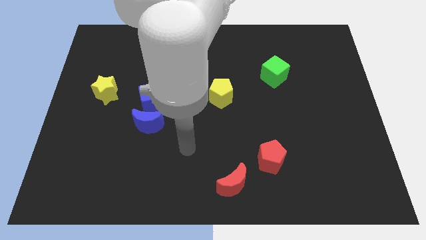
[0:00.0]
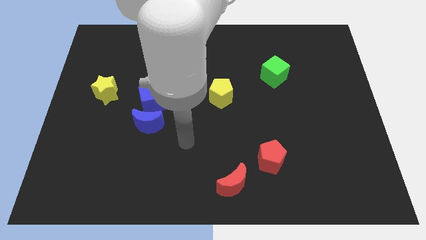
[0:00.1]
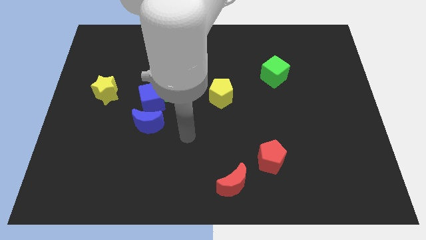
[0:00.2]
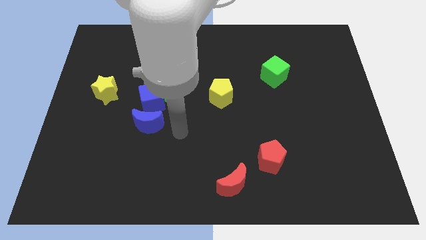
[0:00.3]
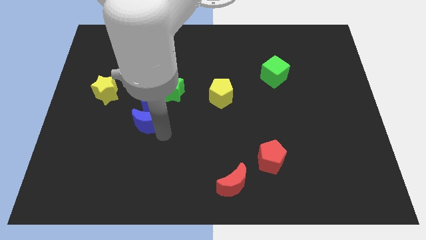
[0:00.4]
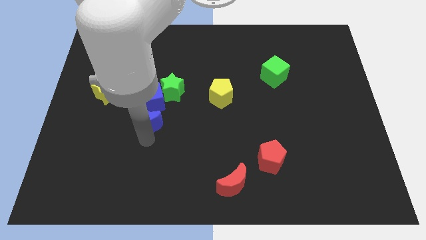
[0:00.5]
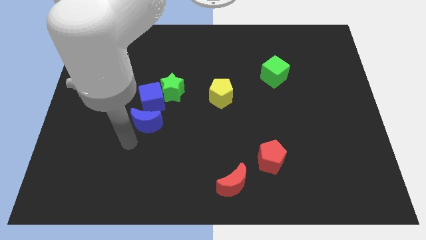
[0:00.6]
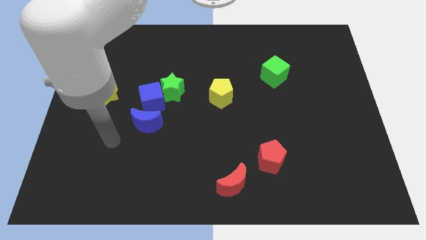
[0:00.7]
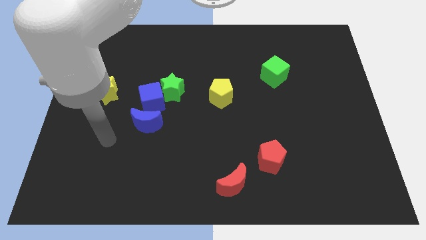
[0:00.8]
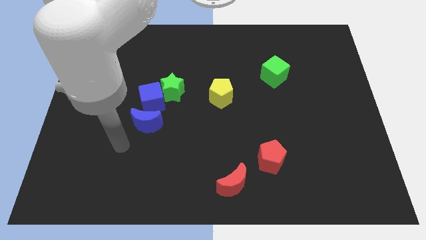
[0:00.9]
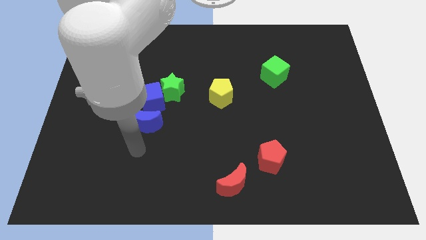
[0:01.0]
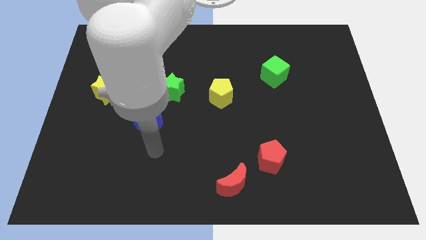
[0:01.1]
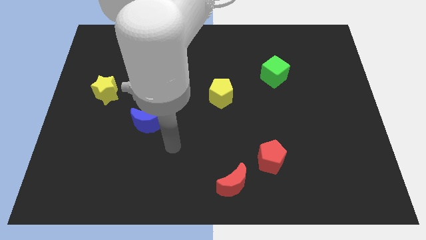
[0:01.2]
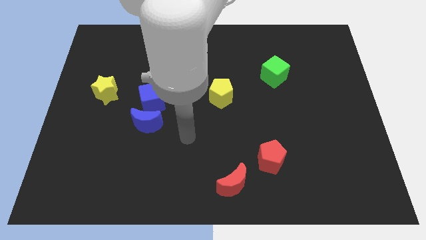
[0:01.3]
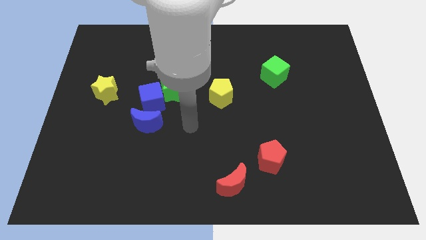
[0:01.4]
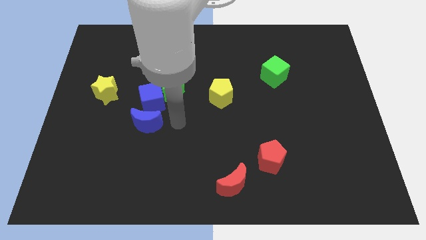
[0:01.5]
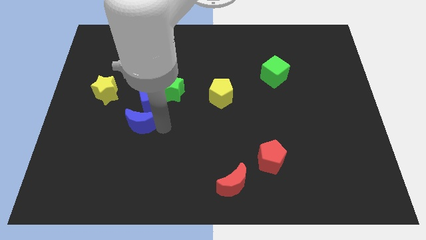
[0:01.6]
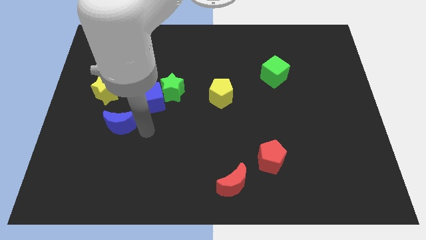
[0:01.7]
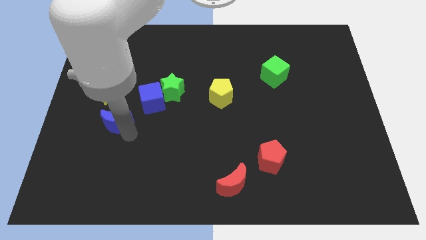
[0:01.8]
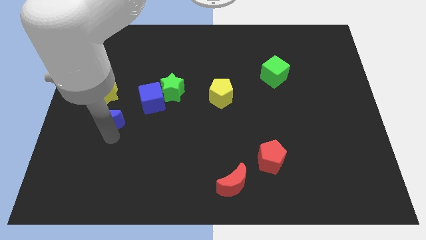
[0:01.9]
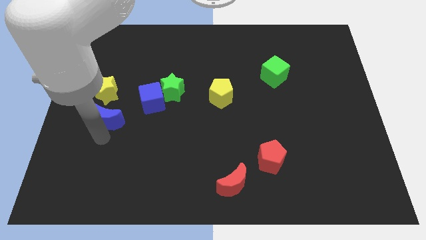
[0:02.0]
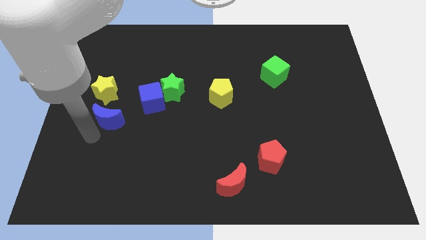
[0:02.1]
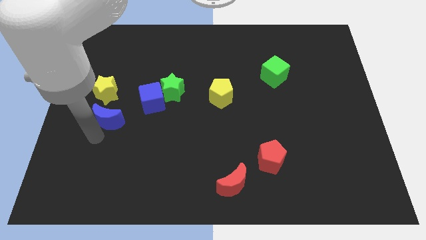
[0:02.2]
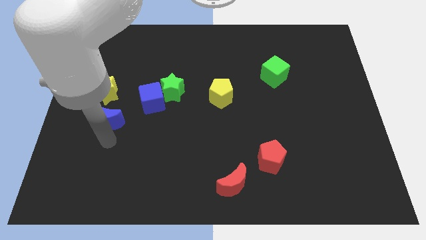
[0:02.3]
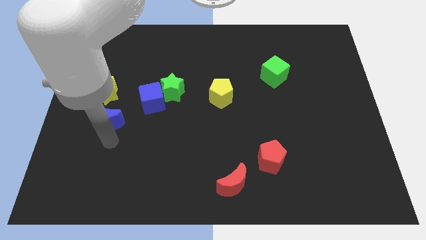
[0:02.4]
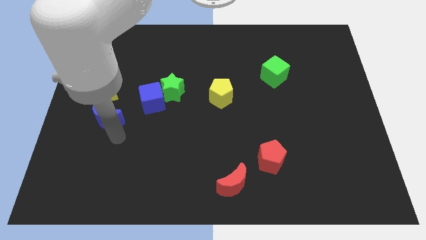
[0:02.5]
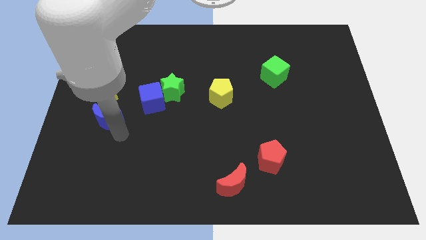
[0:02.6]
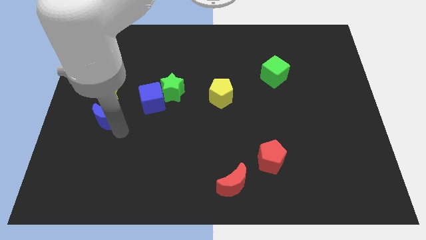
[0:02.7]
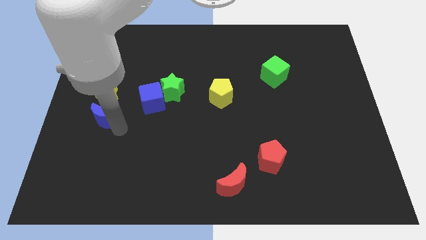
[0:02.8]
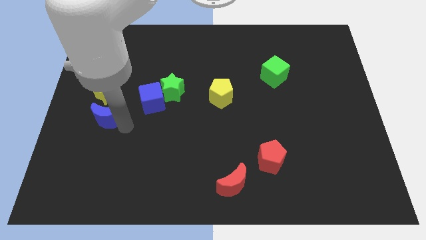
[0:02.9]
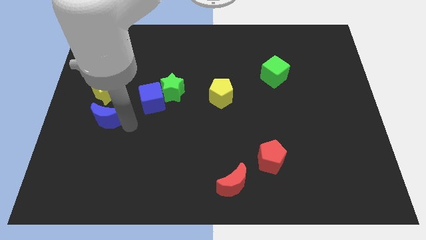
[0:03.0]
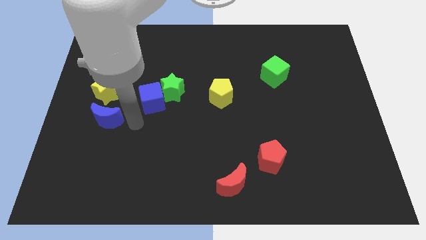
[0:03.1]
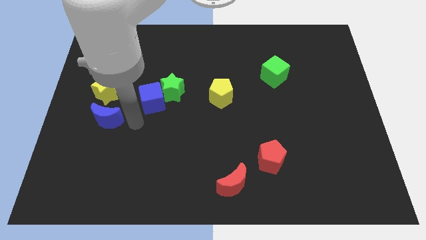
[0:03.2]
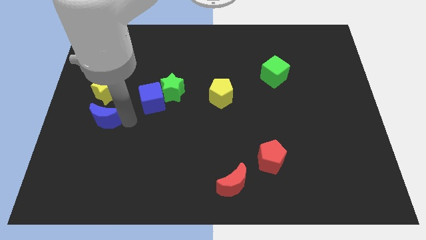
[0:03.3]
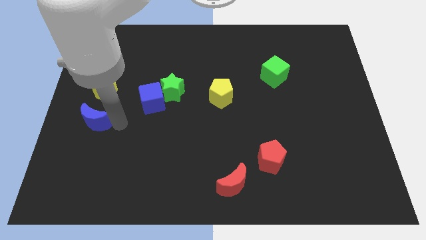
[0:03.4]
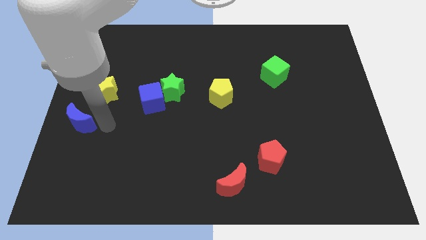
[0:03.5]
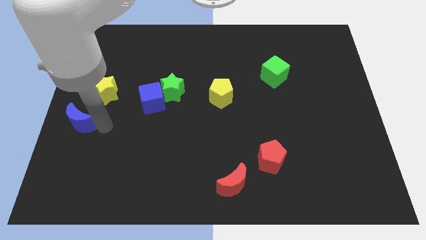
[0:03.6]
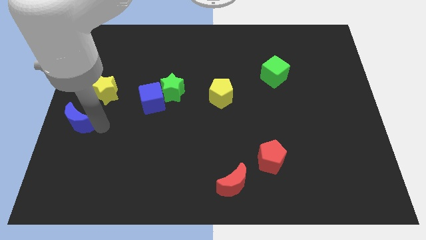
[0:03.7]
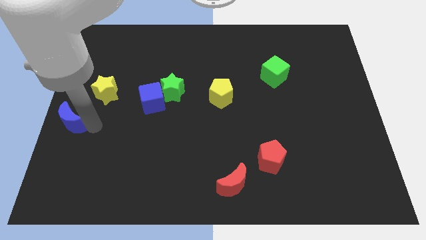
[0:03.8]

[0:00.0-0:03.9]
put the blue moon at the center left of the board

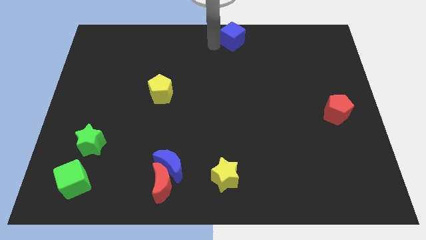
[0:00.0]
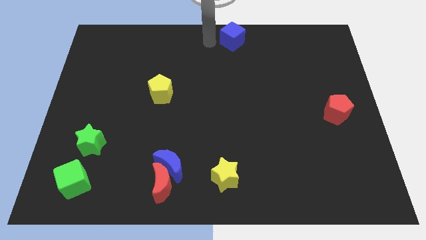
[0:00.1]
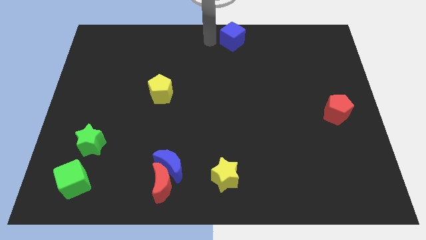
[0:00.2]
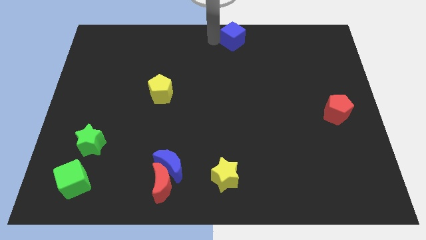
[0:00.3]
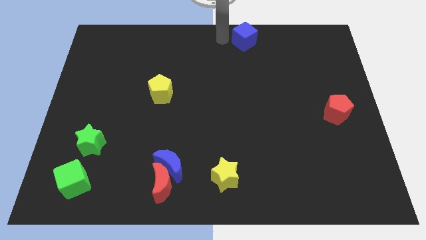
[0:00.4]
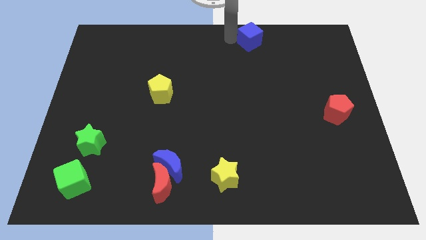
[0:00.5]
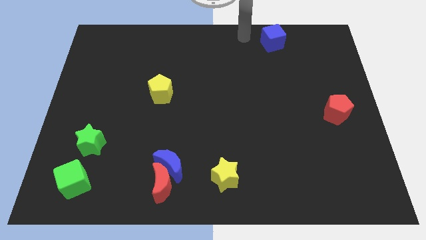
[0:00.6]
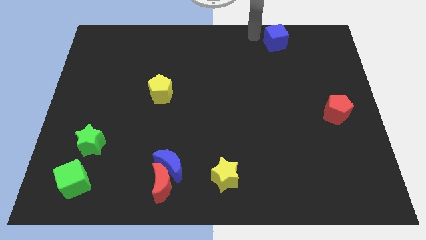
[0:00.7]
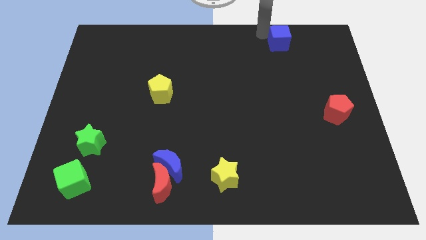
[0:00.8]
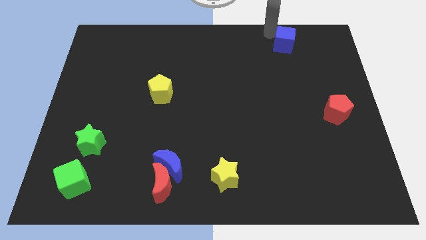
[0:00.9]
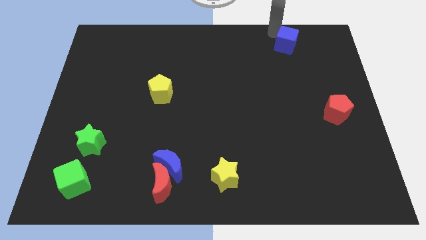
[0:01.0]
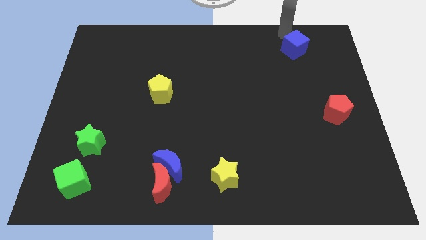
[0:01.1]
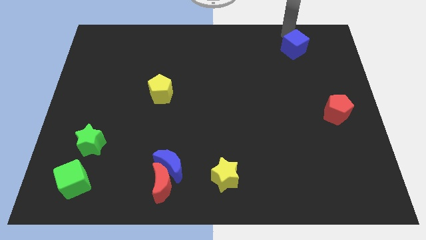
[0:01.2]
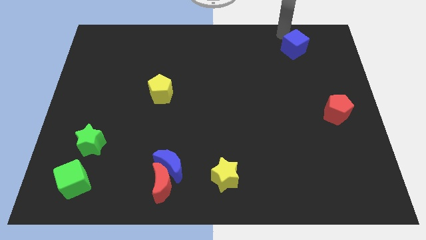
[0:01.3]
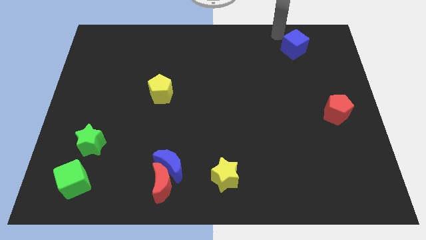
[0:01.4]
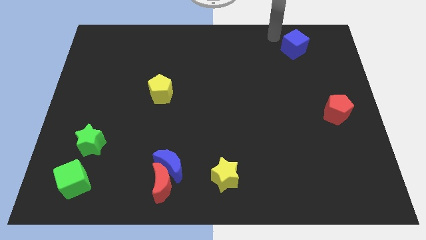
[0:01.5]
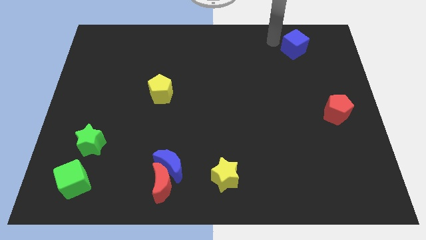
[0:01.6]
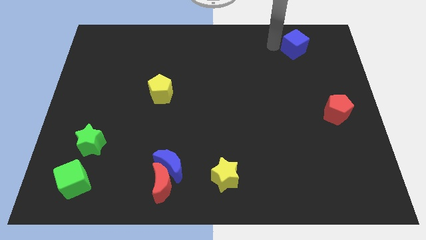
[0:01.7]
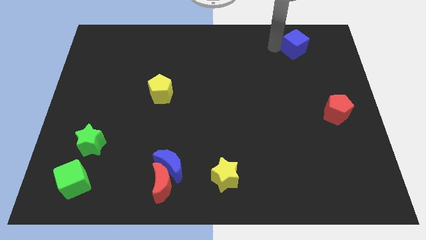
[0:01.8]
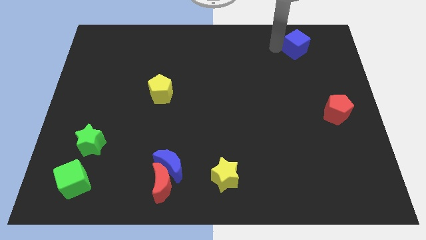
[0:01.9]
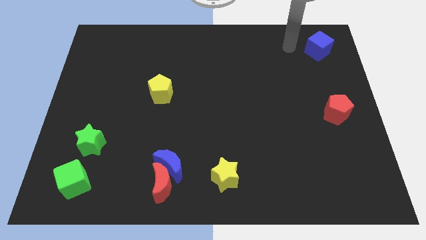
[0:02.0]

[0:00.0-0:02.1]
move blue cube towards top right

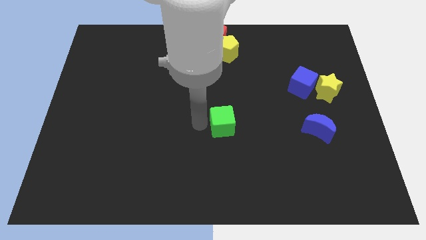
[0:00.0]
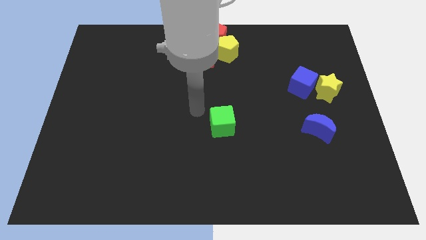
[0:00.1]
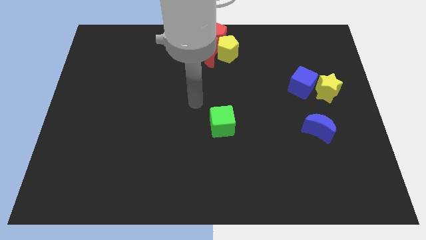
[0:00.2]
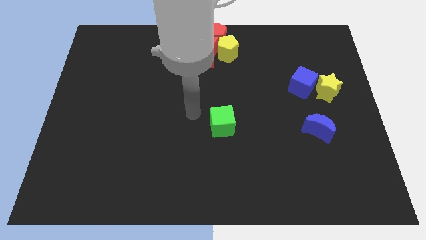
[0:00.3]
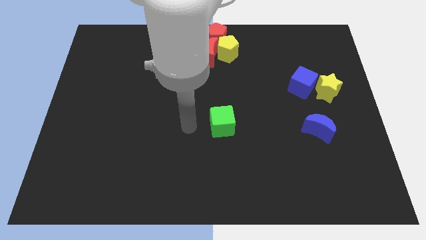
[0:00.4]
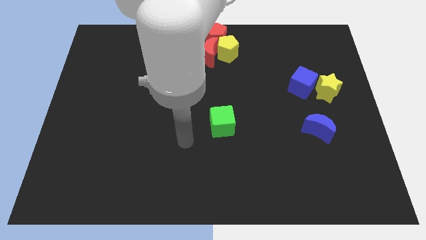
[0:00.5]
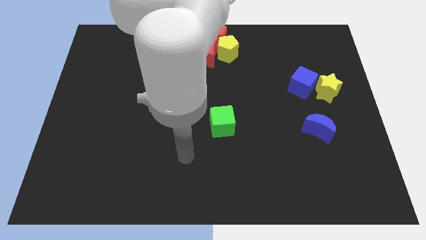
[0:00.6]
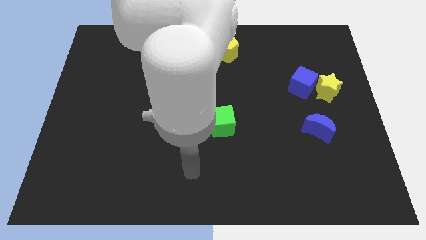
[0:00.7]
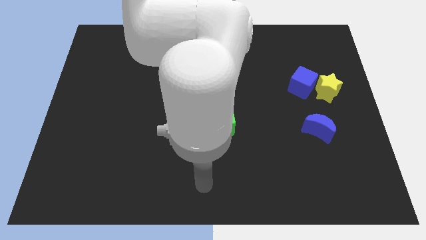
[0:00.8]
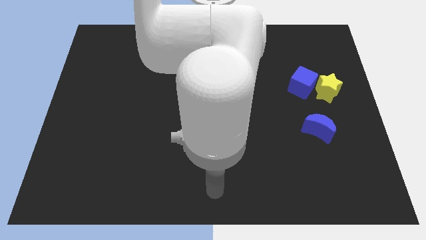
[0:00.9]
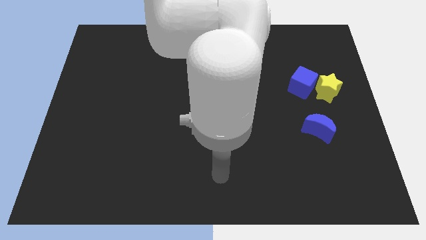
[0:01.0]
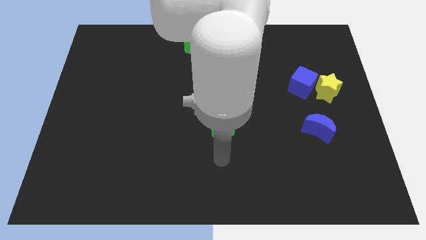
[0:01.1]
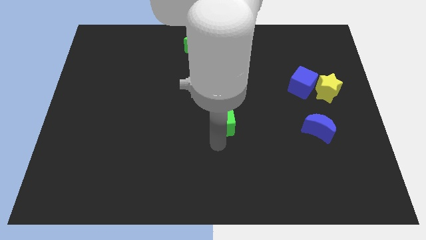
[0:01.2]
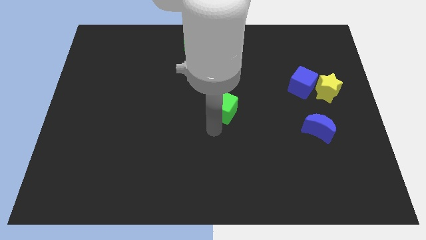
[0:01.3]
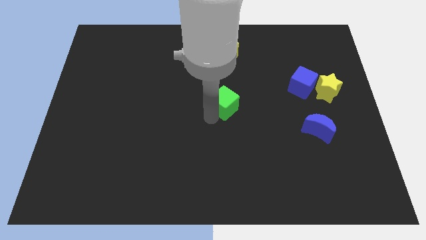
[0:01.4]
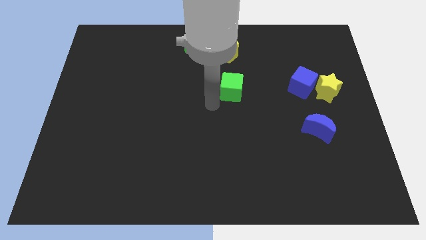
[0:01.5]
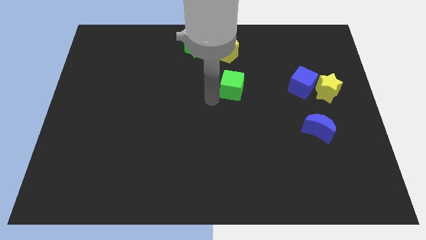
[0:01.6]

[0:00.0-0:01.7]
push the green cube towards the group of blocks at the top center of the board

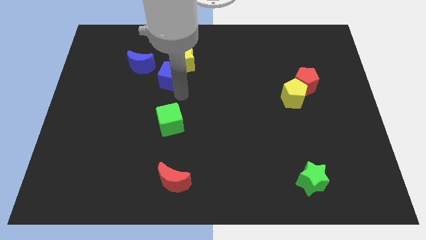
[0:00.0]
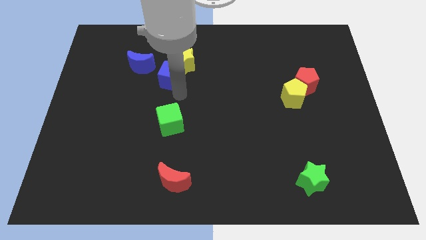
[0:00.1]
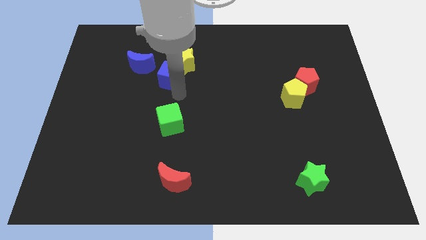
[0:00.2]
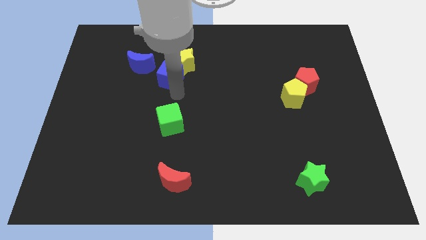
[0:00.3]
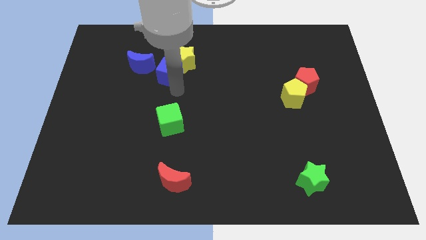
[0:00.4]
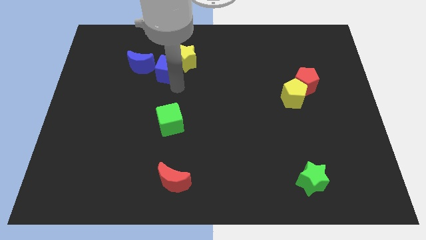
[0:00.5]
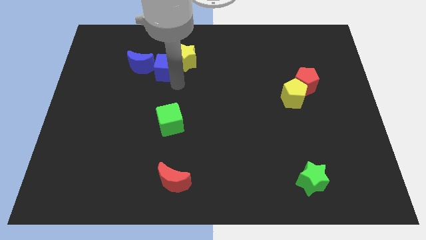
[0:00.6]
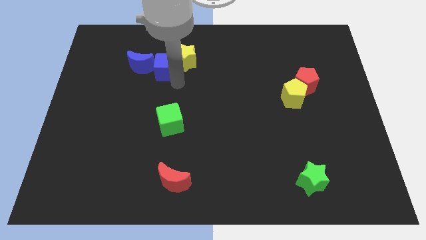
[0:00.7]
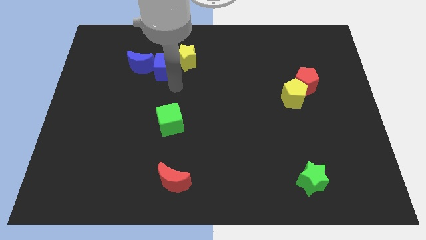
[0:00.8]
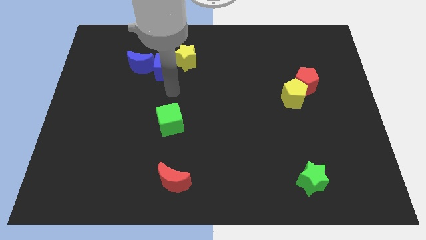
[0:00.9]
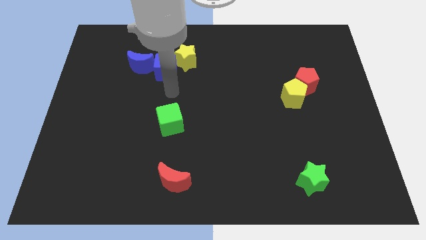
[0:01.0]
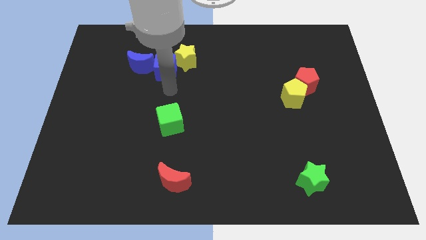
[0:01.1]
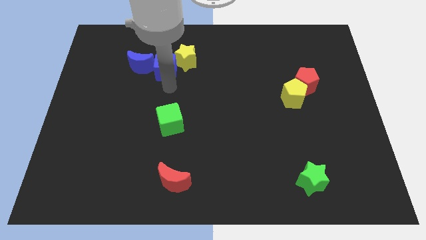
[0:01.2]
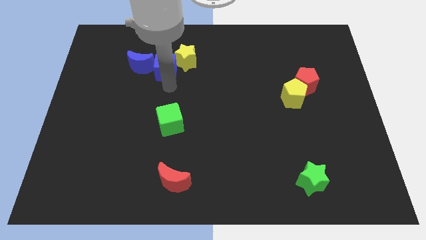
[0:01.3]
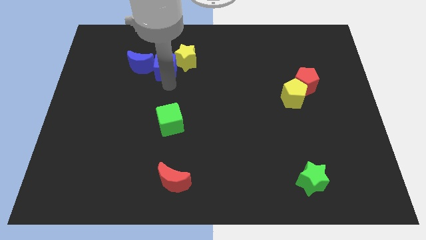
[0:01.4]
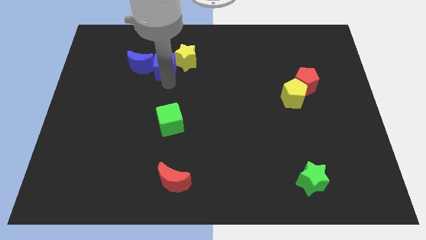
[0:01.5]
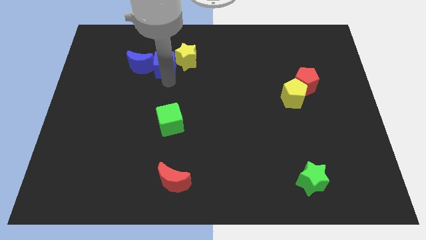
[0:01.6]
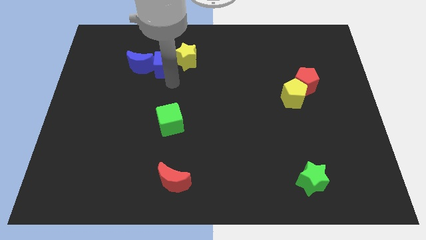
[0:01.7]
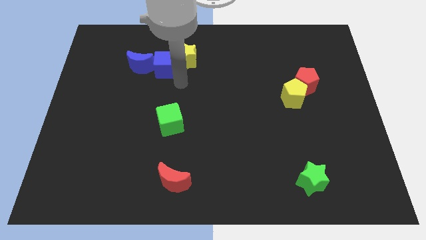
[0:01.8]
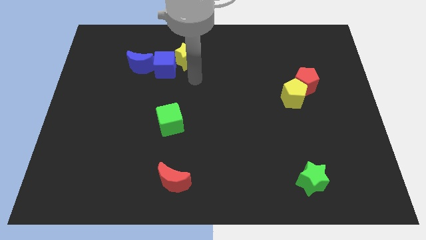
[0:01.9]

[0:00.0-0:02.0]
move blue cube to the right of the blue moon
